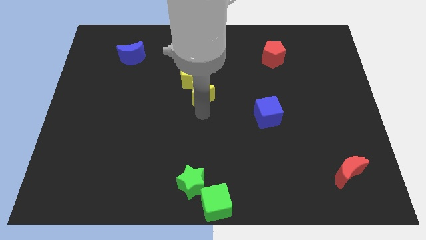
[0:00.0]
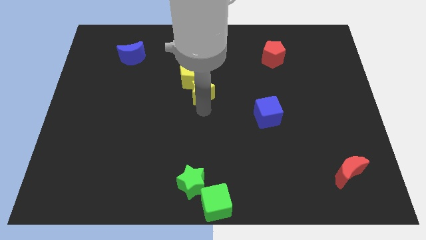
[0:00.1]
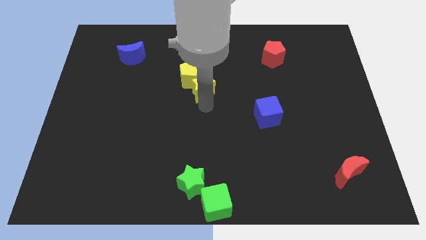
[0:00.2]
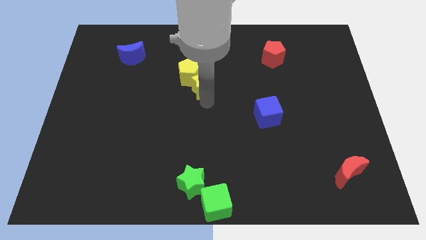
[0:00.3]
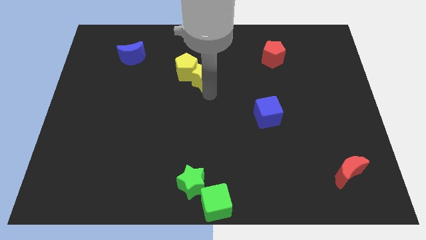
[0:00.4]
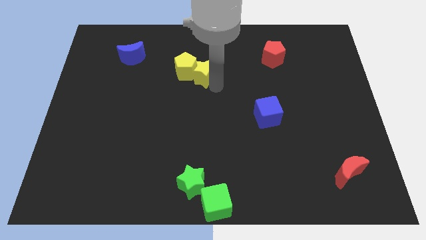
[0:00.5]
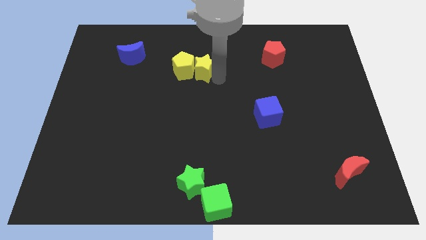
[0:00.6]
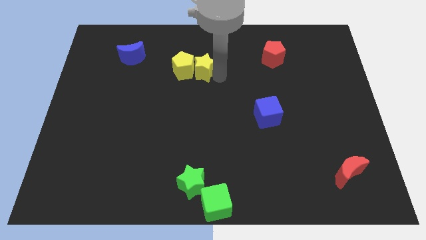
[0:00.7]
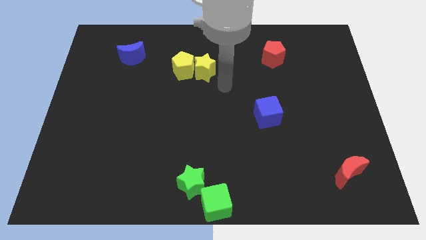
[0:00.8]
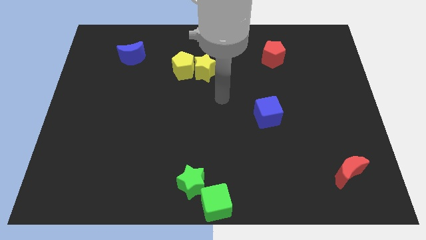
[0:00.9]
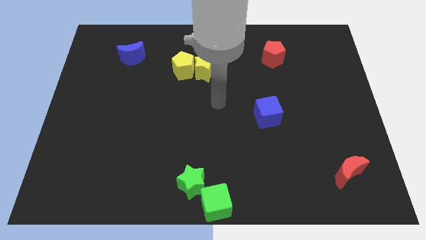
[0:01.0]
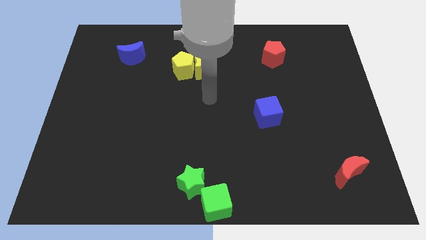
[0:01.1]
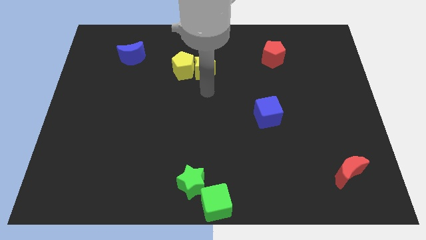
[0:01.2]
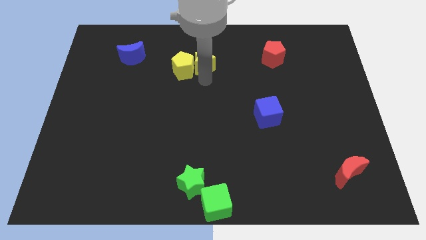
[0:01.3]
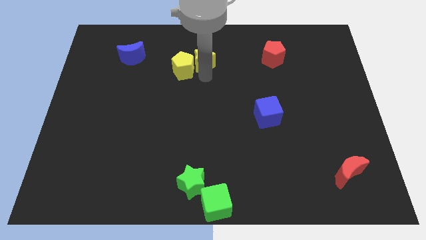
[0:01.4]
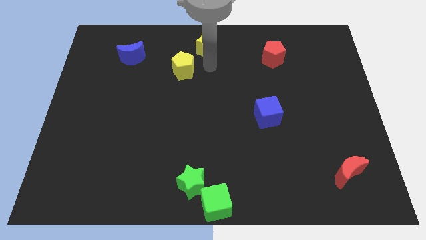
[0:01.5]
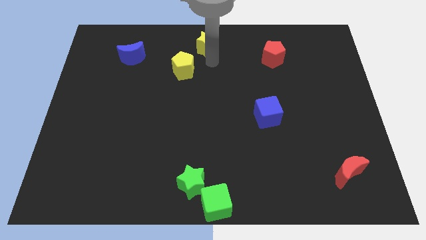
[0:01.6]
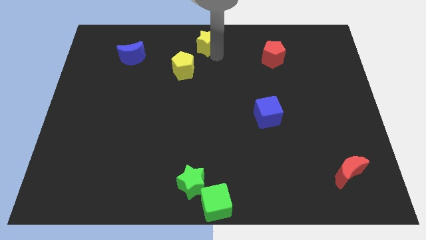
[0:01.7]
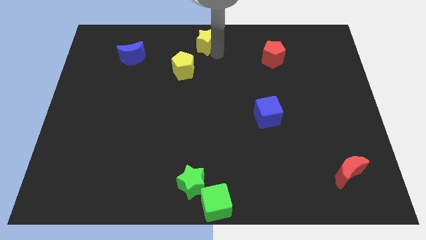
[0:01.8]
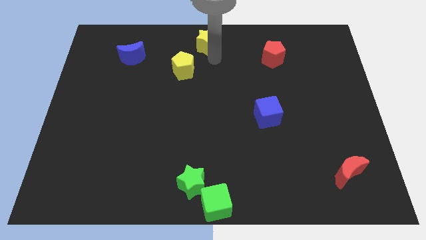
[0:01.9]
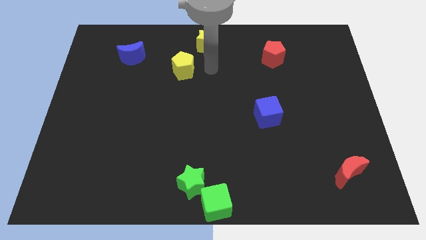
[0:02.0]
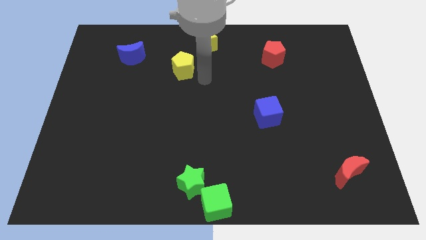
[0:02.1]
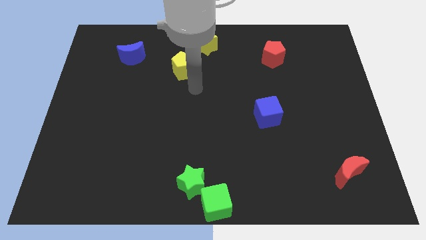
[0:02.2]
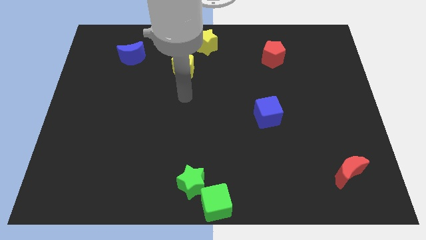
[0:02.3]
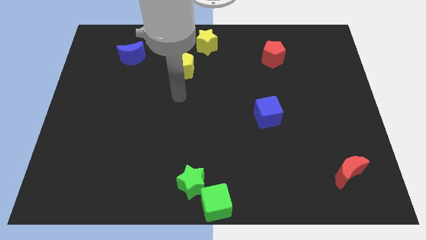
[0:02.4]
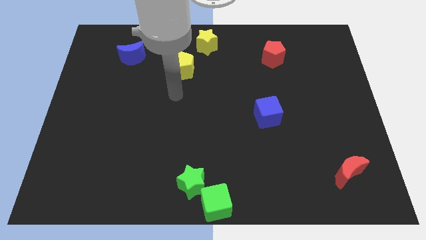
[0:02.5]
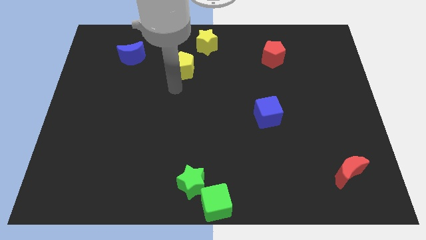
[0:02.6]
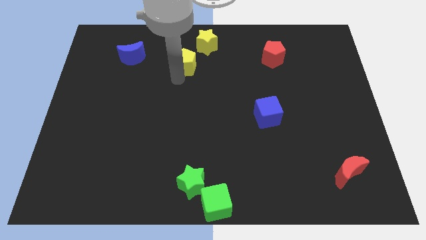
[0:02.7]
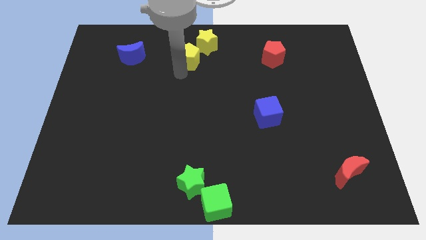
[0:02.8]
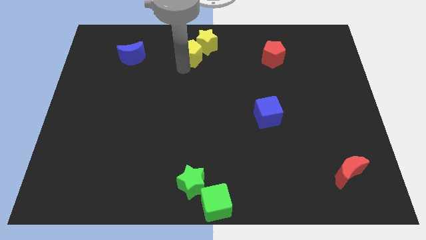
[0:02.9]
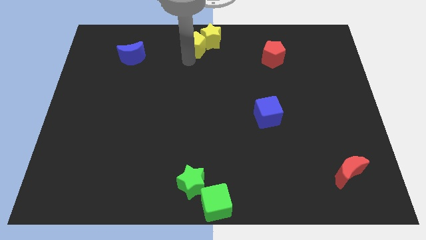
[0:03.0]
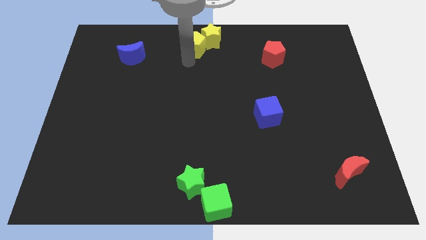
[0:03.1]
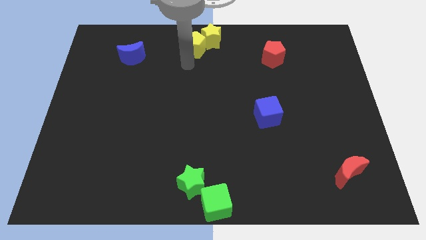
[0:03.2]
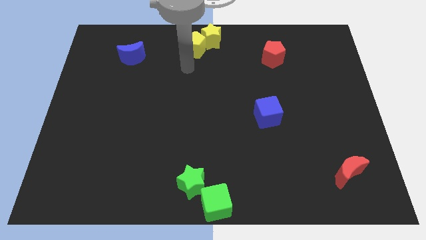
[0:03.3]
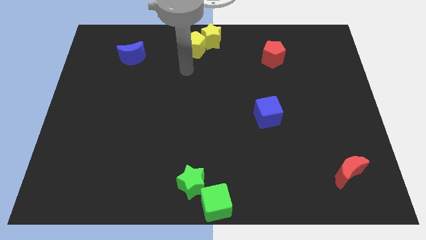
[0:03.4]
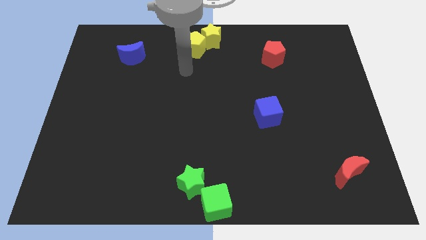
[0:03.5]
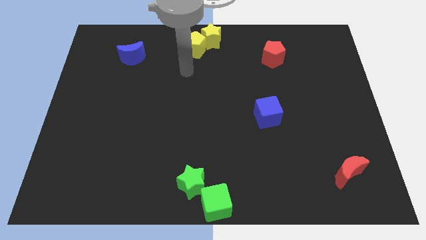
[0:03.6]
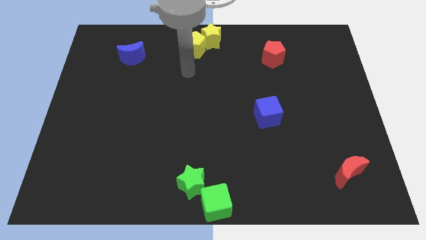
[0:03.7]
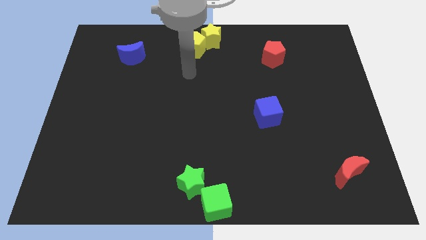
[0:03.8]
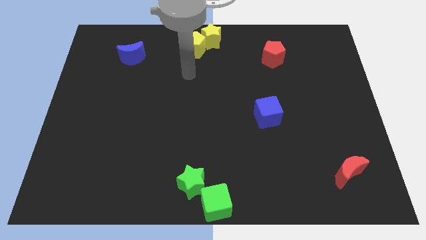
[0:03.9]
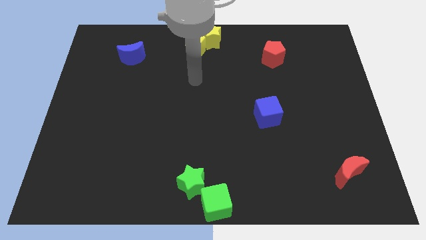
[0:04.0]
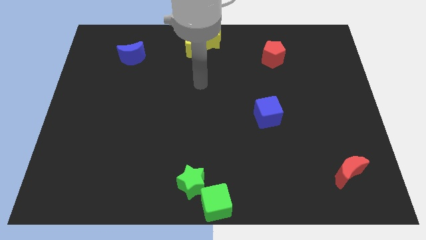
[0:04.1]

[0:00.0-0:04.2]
push the yellow blocks to the top center of the board

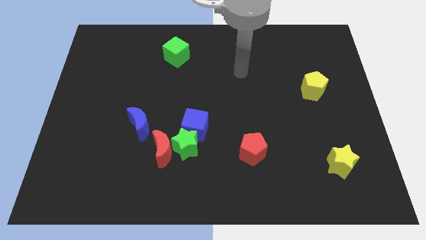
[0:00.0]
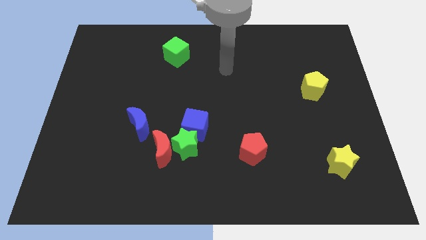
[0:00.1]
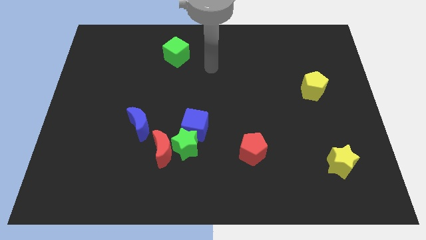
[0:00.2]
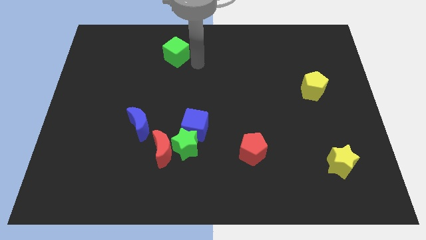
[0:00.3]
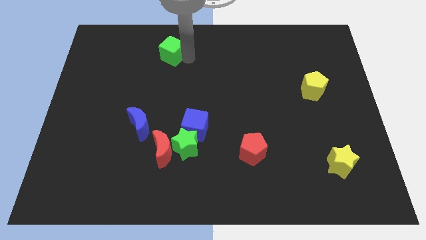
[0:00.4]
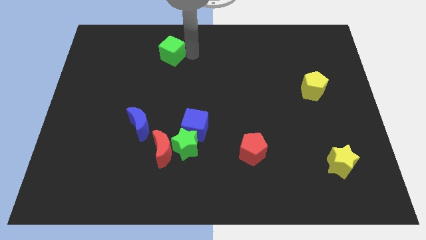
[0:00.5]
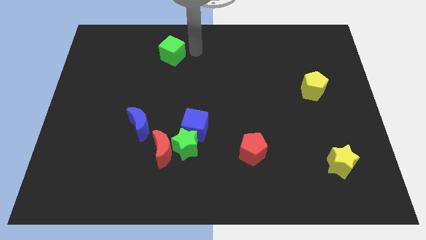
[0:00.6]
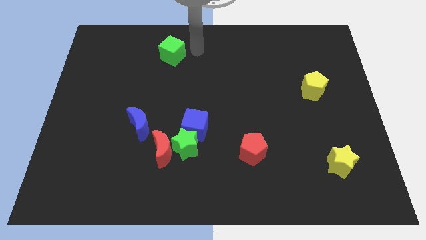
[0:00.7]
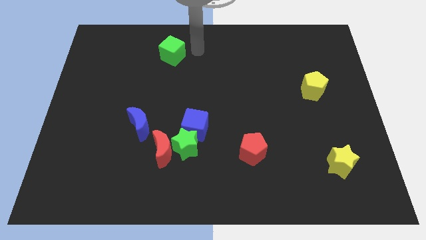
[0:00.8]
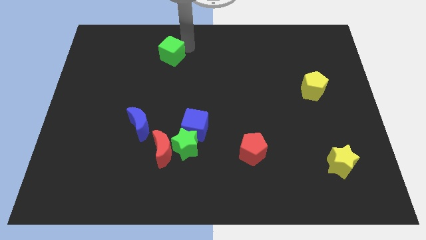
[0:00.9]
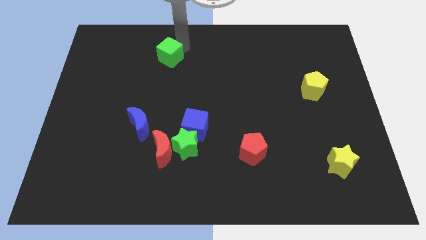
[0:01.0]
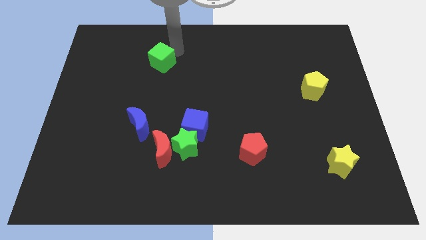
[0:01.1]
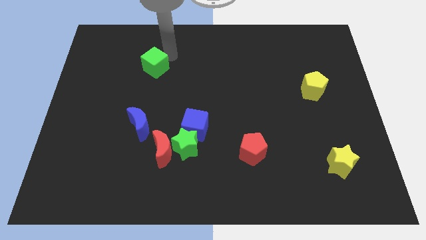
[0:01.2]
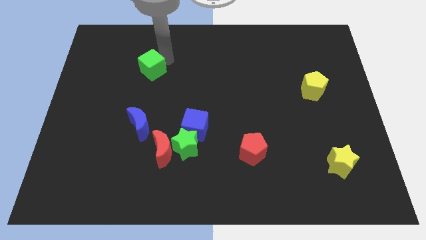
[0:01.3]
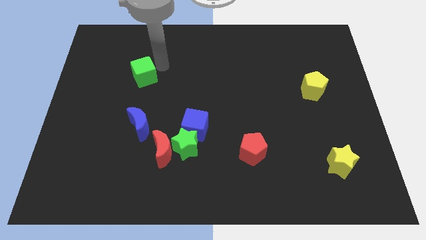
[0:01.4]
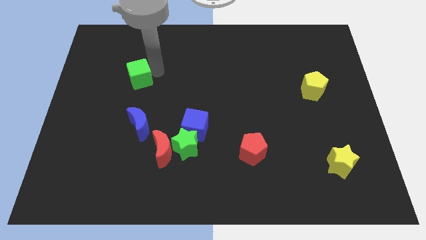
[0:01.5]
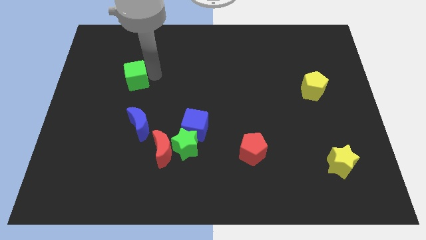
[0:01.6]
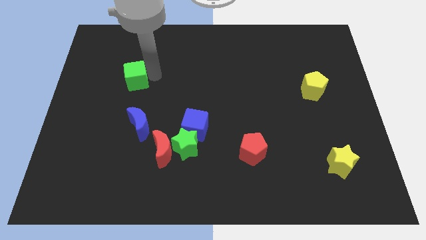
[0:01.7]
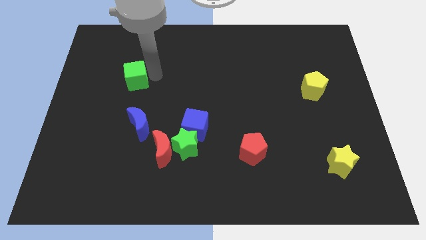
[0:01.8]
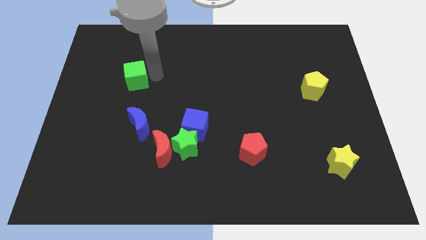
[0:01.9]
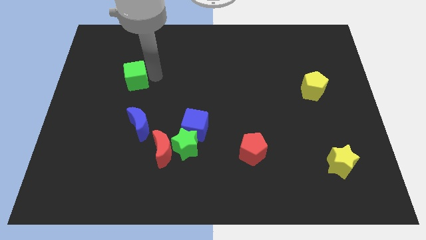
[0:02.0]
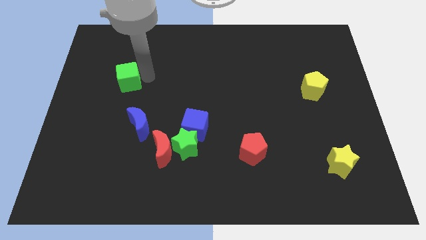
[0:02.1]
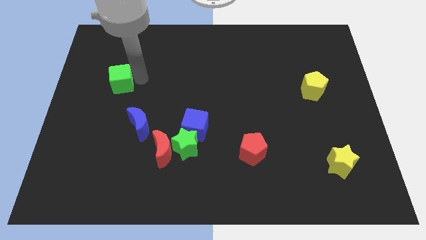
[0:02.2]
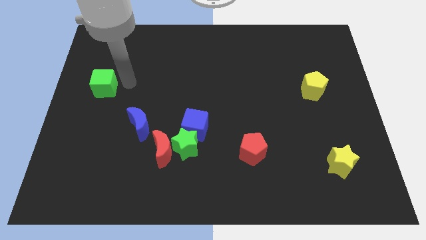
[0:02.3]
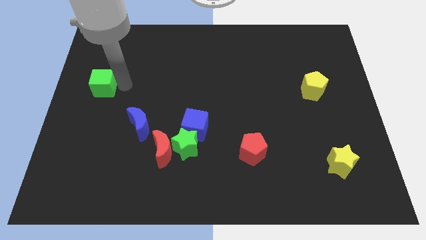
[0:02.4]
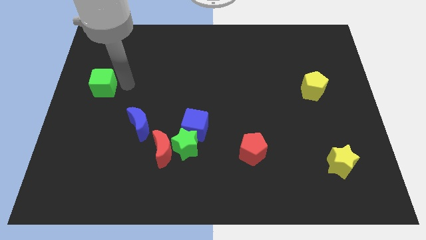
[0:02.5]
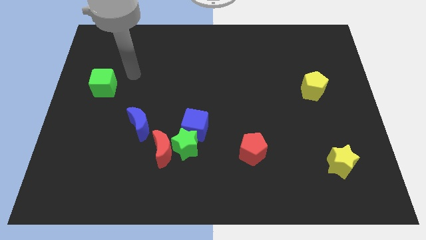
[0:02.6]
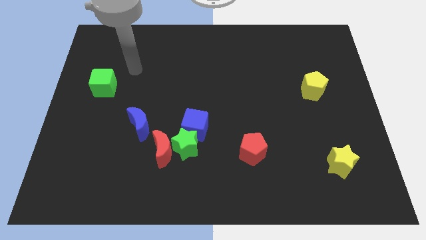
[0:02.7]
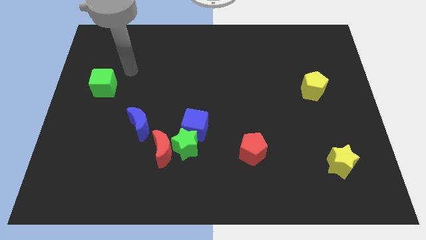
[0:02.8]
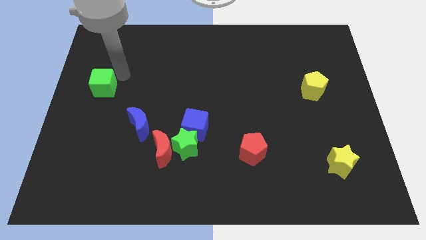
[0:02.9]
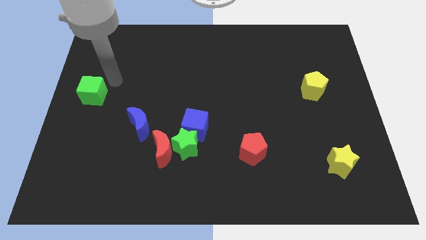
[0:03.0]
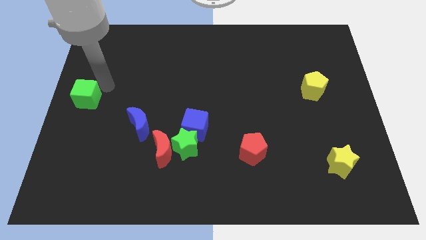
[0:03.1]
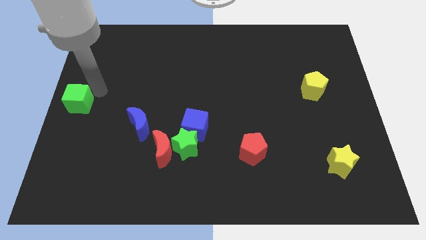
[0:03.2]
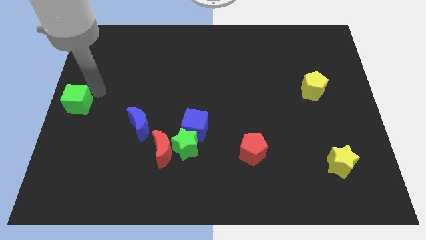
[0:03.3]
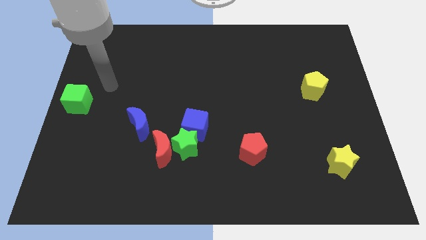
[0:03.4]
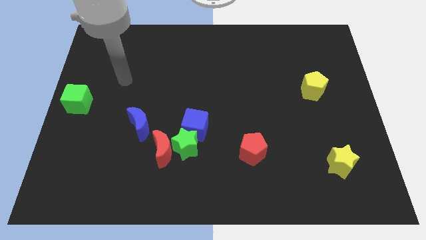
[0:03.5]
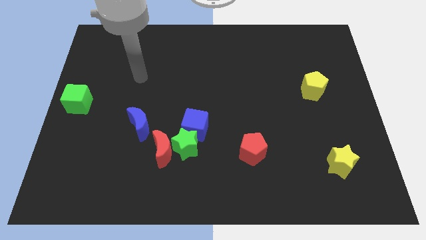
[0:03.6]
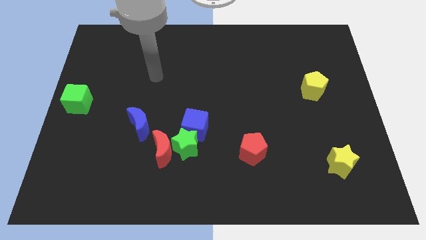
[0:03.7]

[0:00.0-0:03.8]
move the green cube to the left center of the board

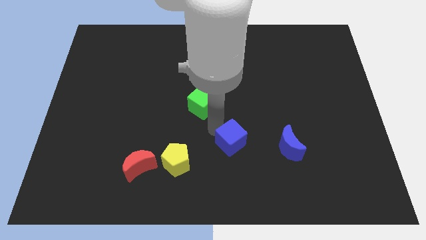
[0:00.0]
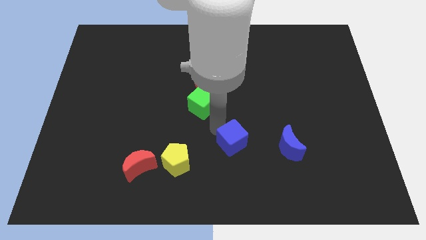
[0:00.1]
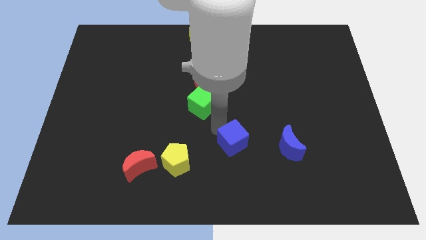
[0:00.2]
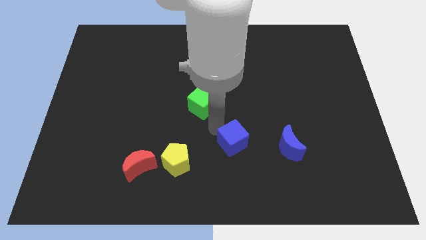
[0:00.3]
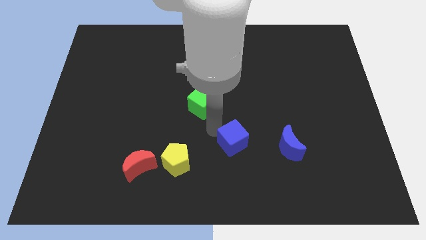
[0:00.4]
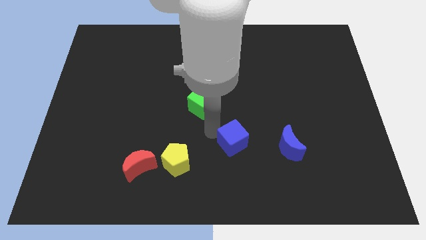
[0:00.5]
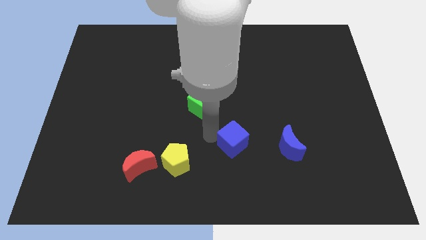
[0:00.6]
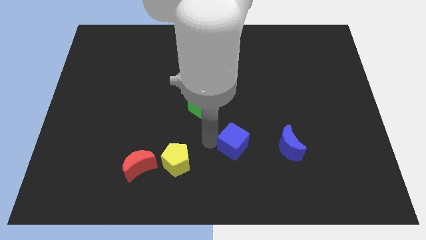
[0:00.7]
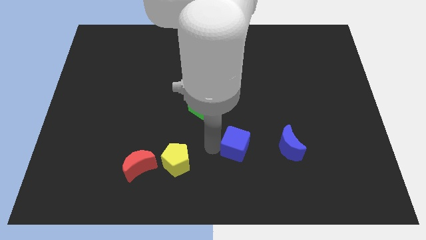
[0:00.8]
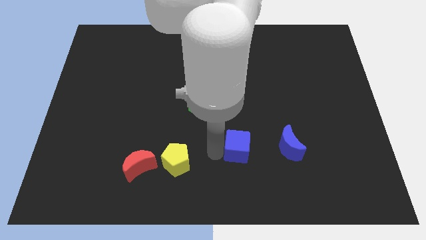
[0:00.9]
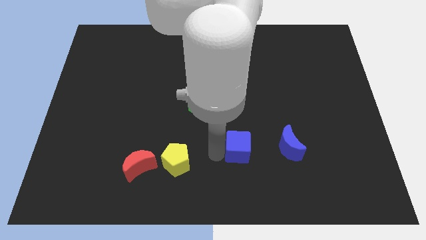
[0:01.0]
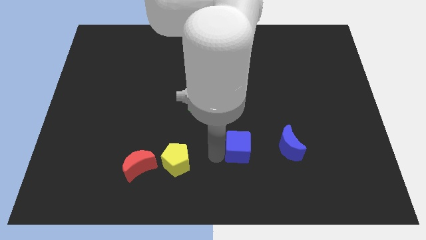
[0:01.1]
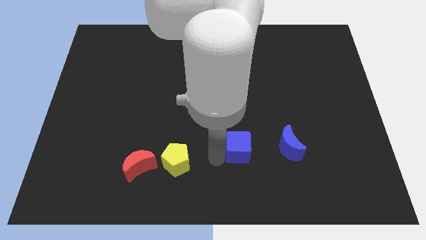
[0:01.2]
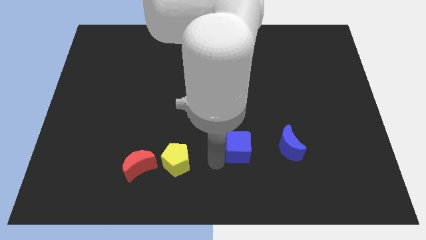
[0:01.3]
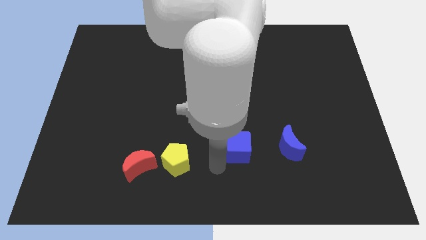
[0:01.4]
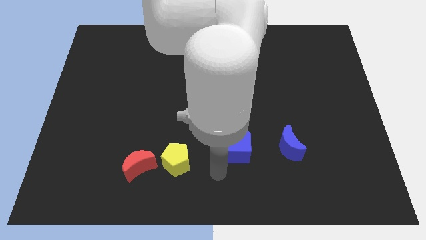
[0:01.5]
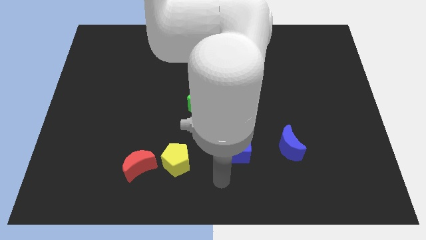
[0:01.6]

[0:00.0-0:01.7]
place the blue cube in between the blue crescent and yellow pentagon
